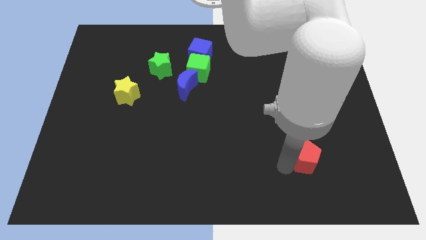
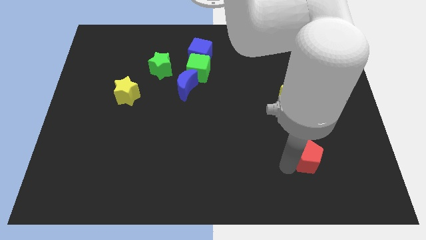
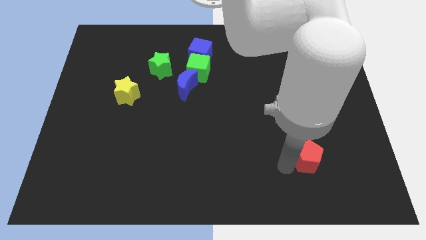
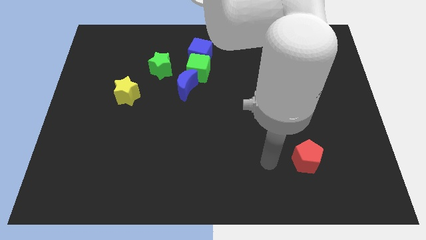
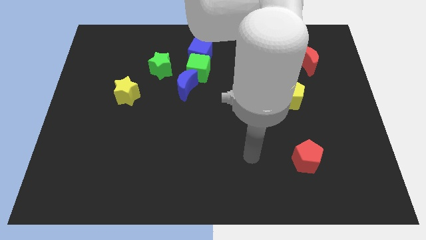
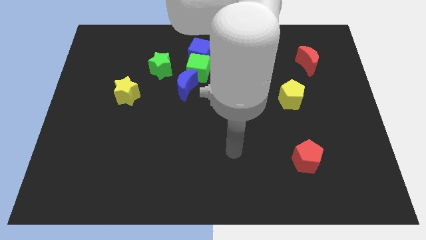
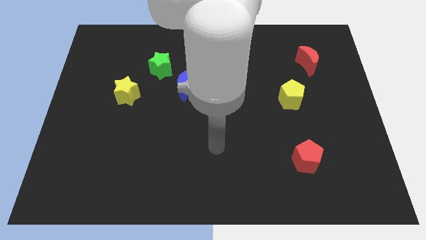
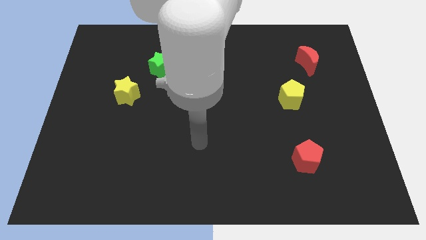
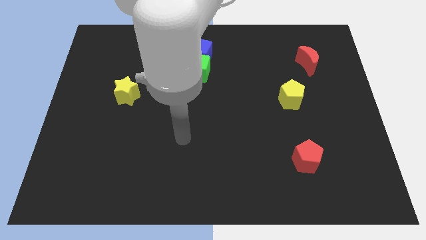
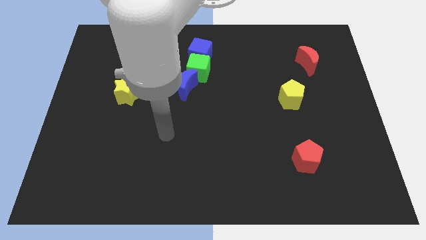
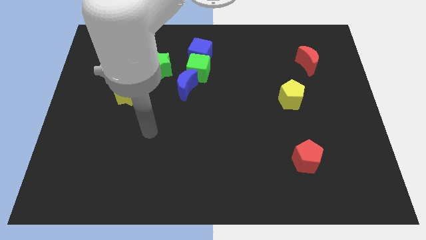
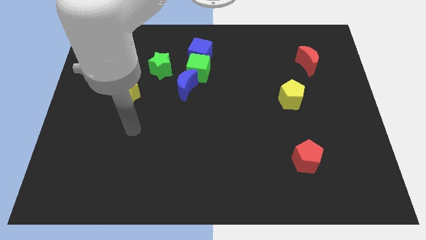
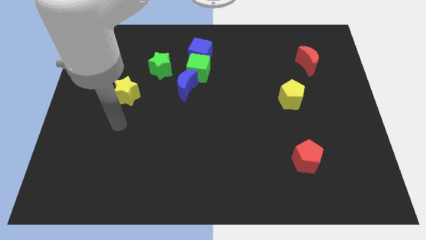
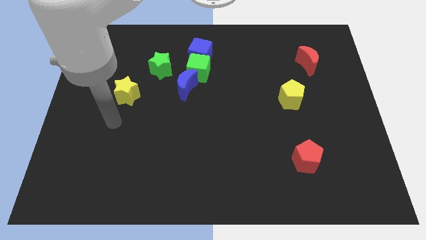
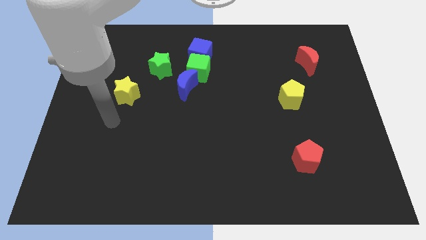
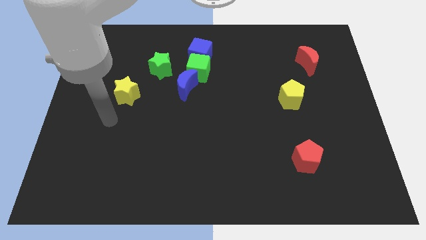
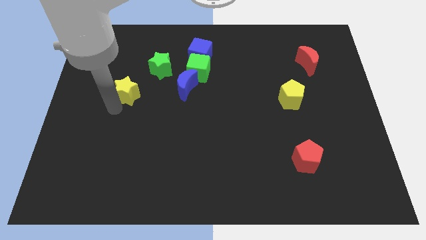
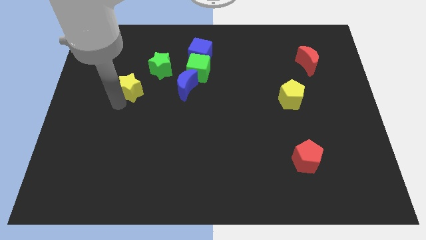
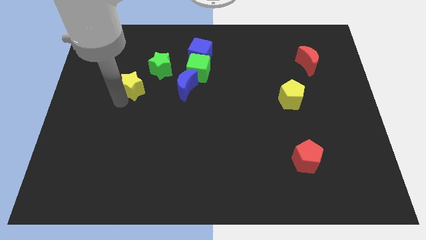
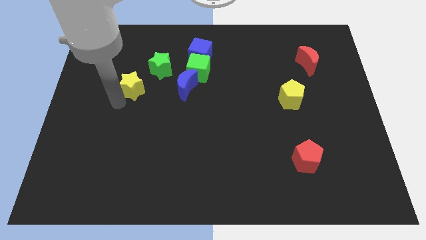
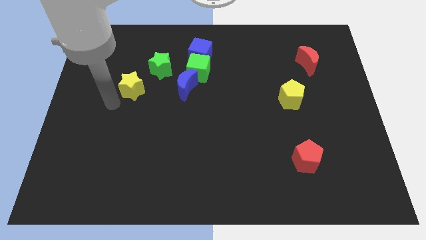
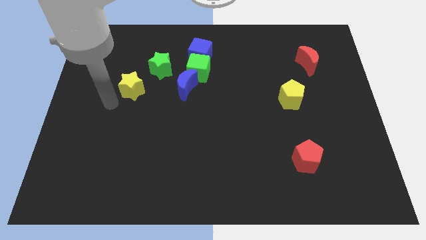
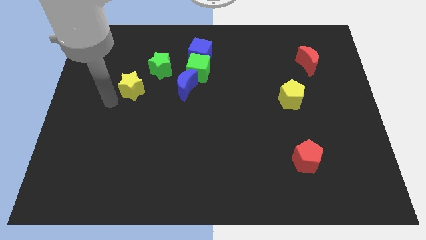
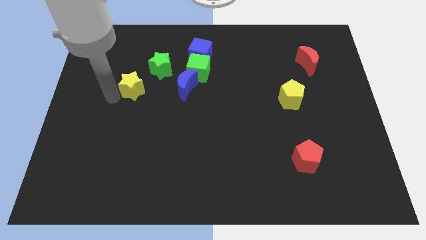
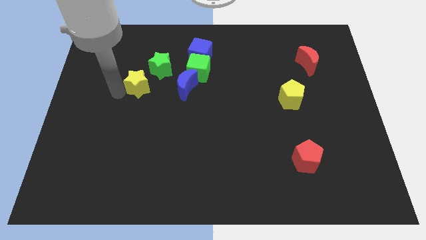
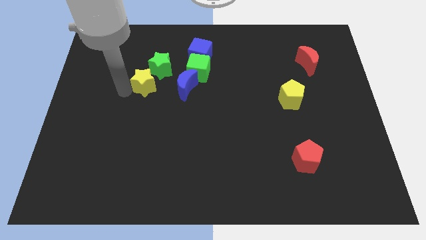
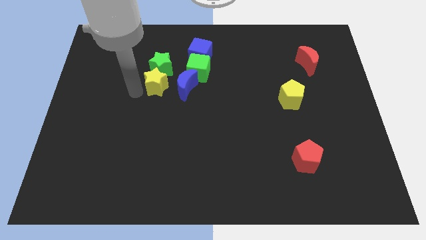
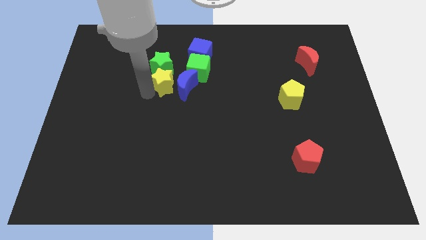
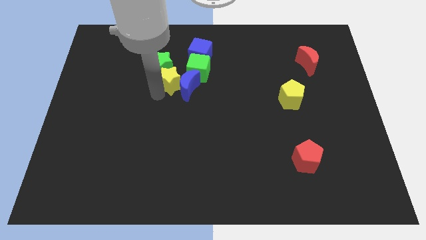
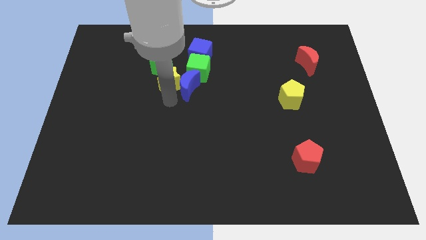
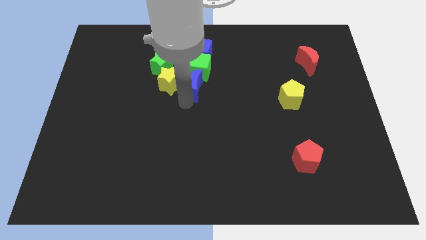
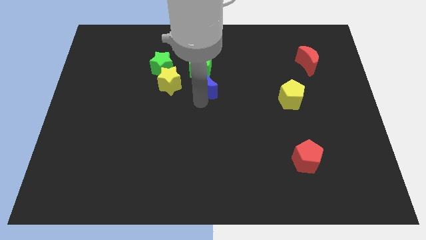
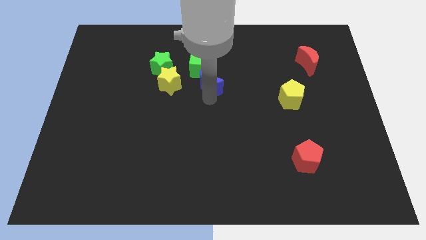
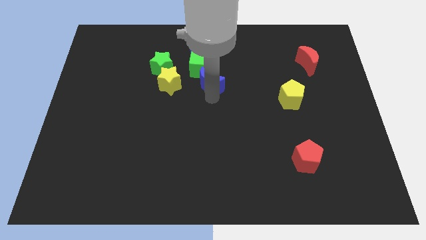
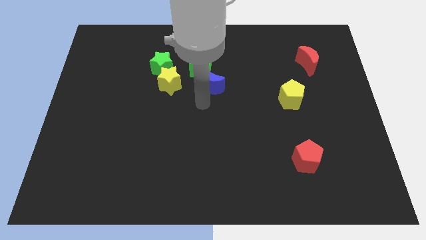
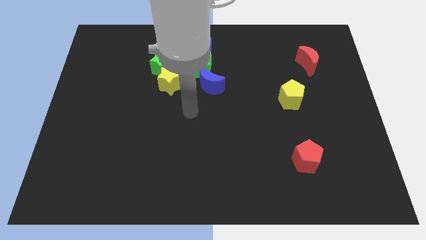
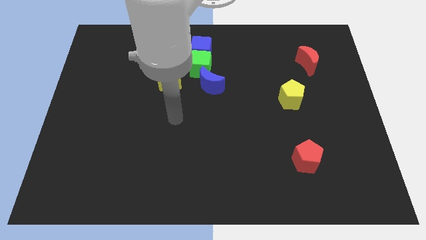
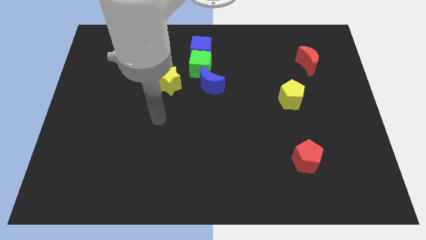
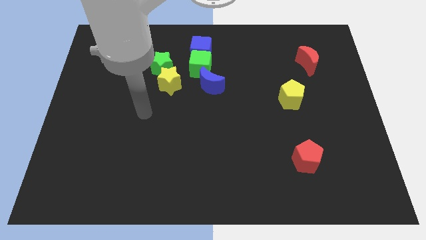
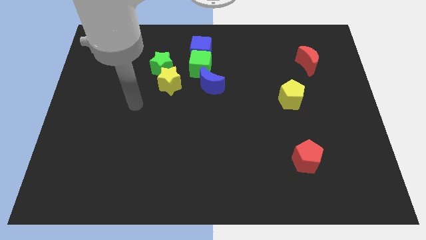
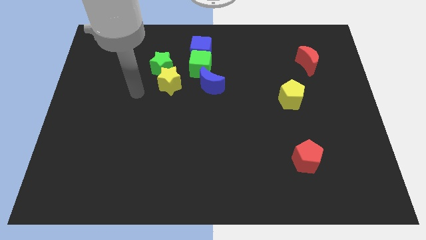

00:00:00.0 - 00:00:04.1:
move the arm away from the red pentagon

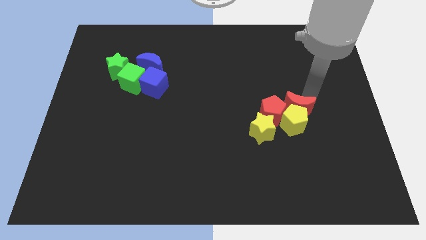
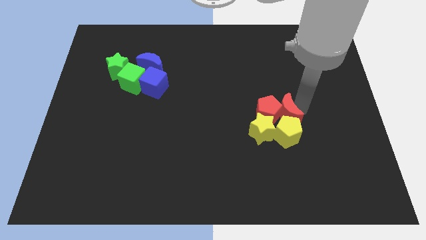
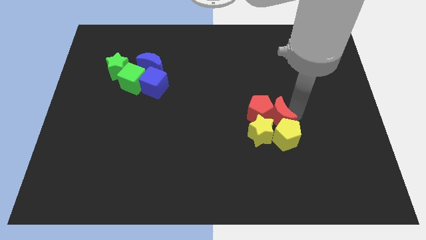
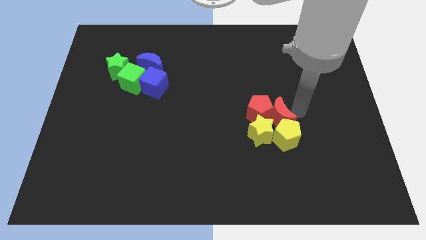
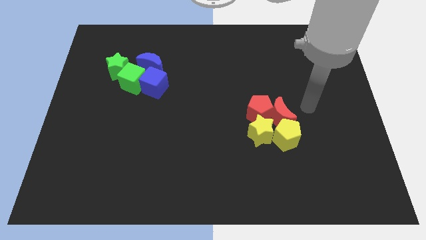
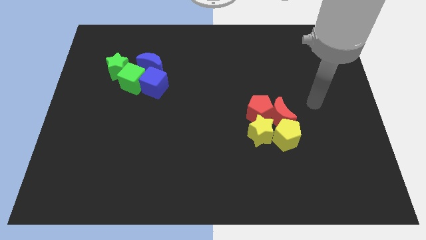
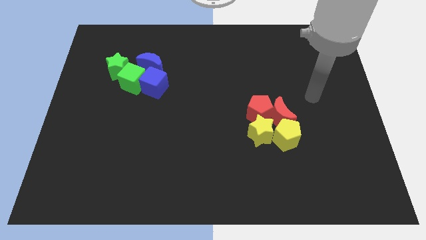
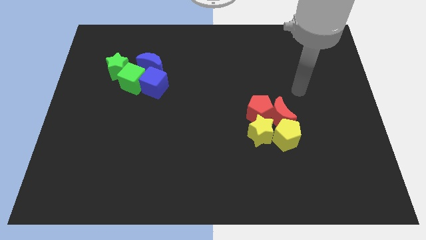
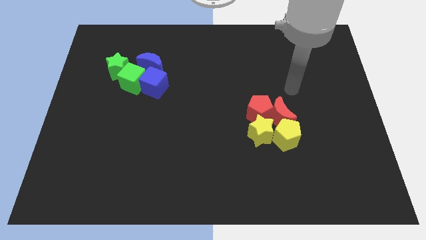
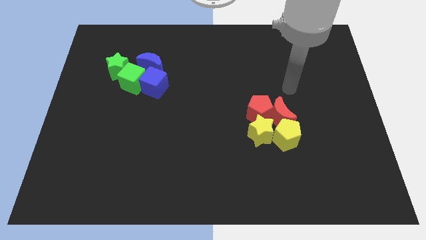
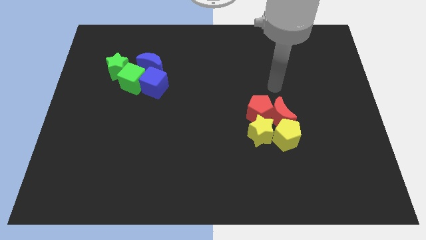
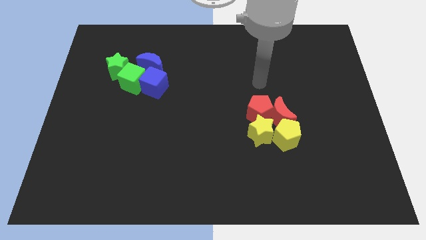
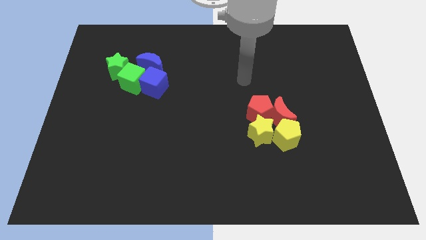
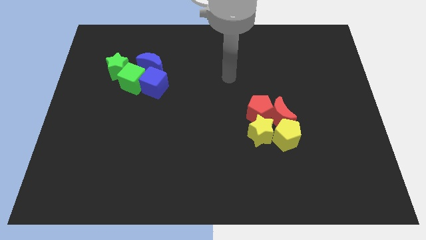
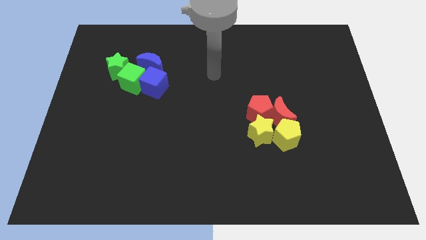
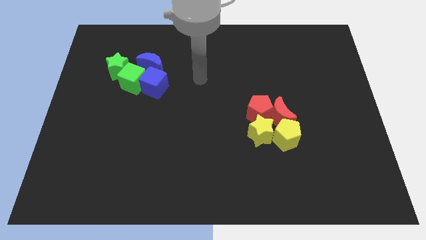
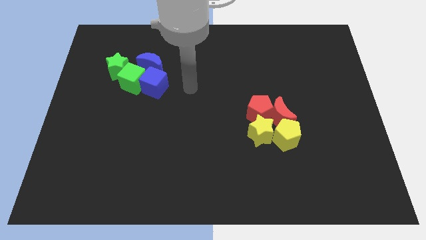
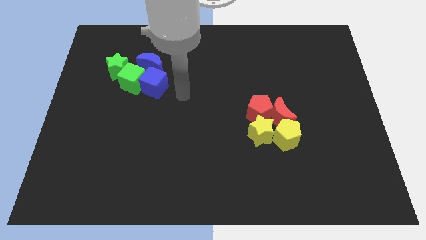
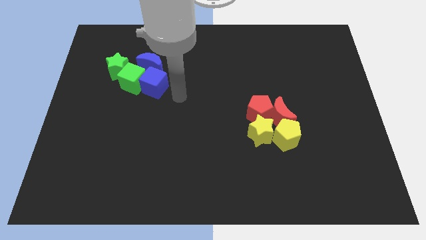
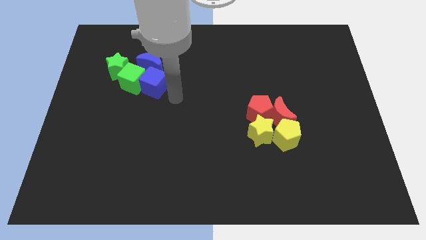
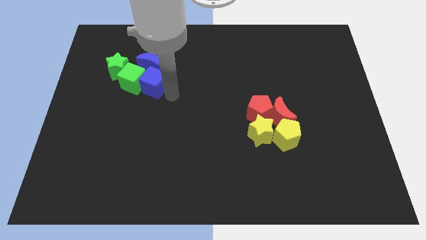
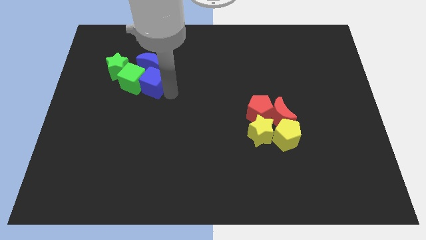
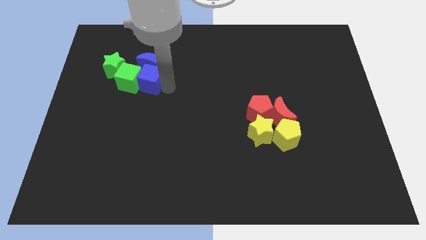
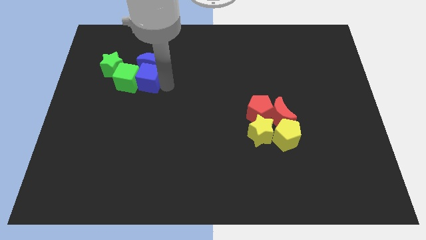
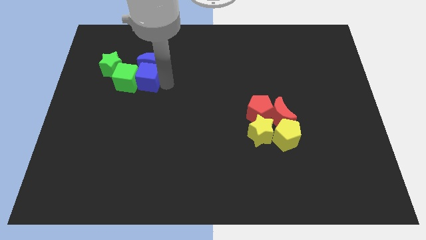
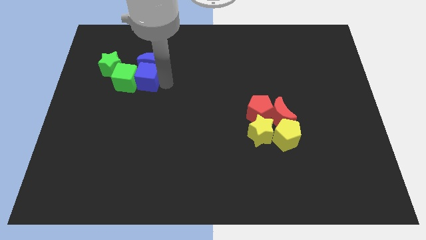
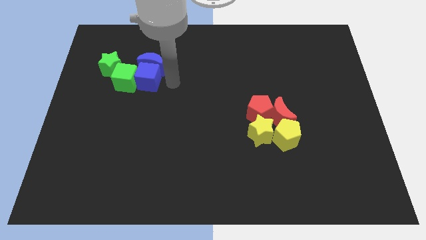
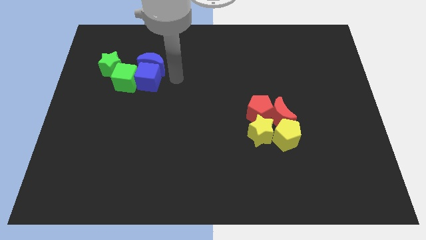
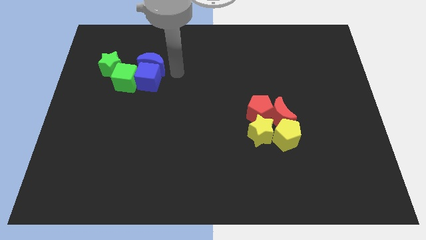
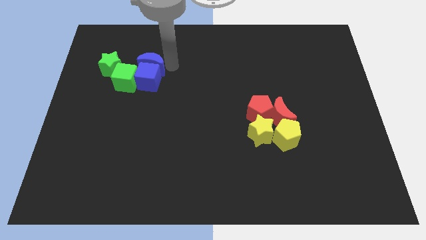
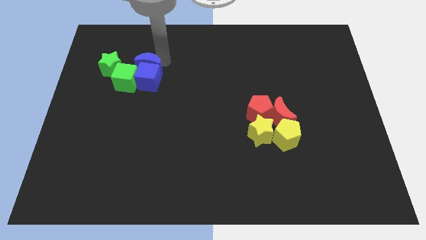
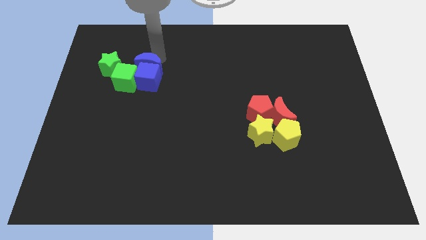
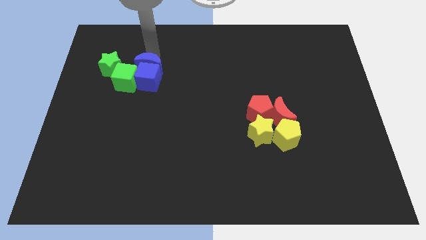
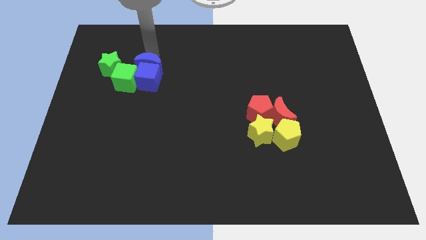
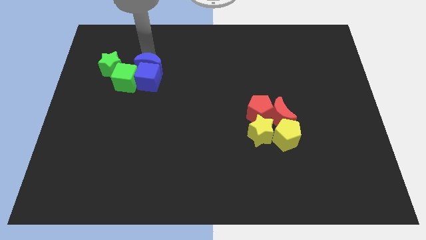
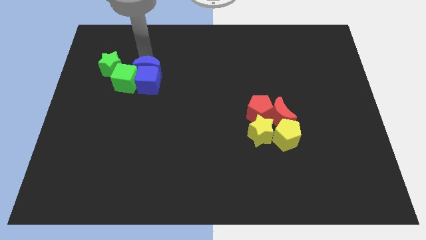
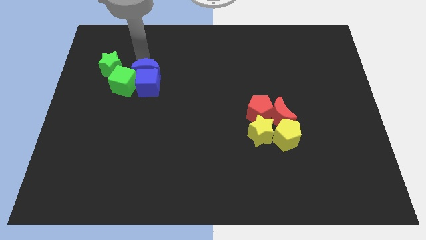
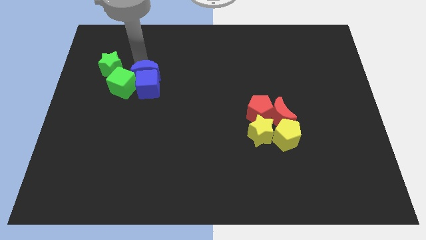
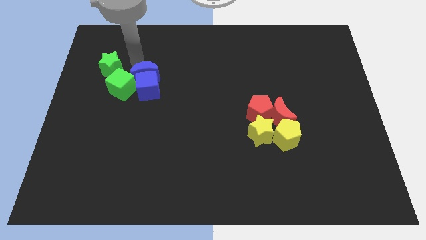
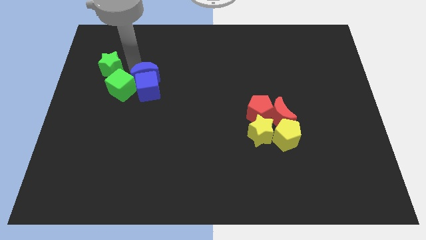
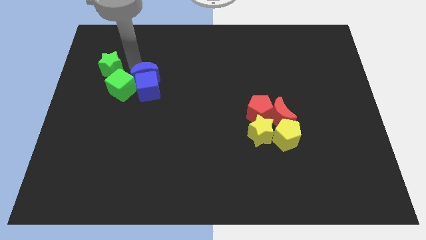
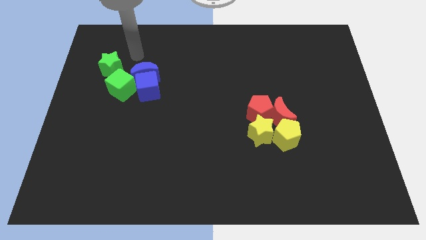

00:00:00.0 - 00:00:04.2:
push the blue cube and the blue moon

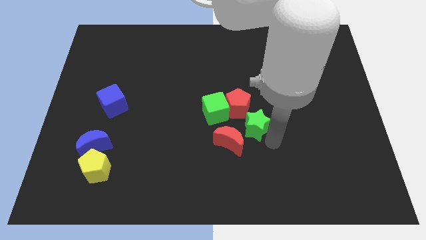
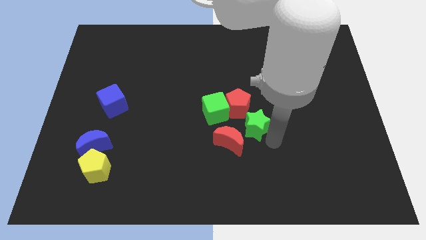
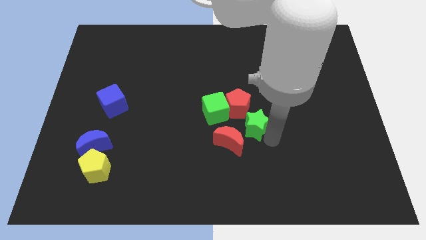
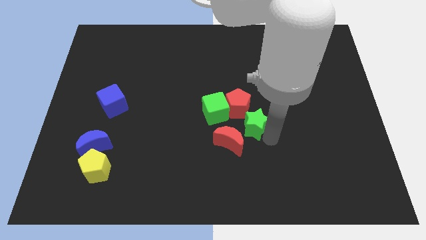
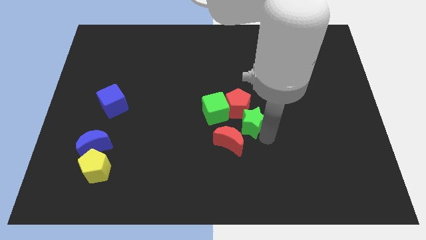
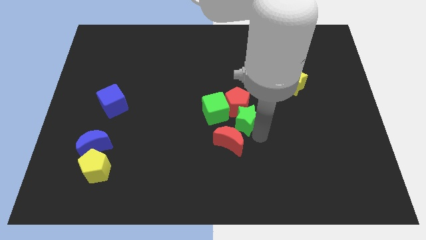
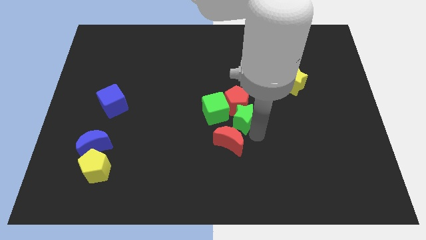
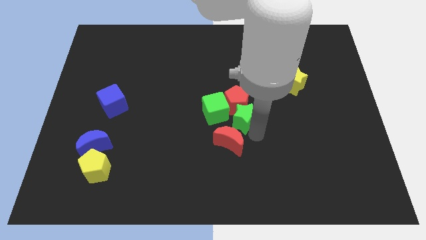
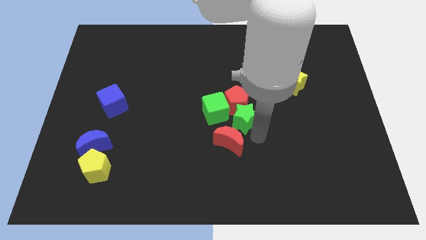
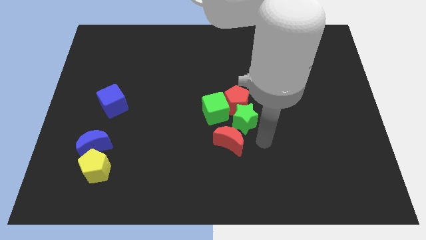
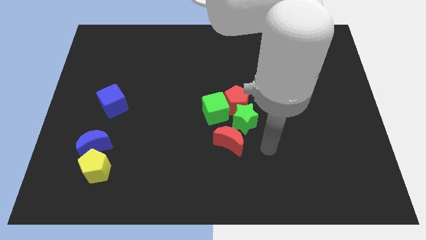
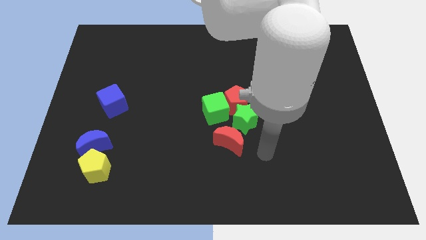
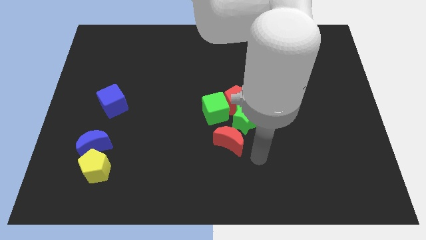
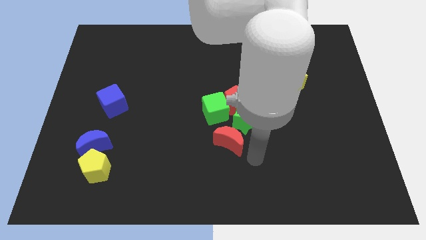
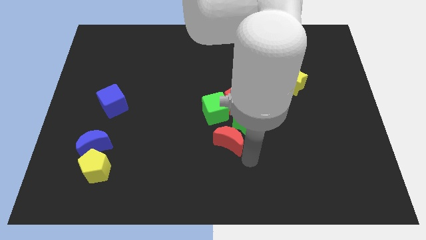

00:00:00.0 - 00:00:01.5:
attach the green star to the red pentagon
